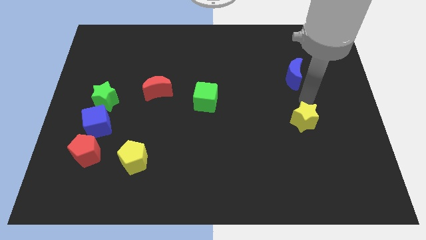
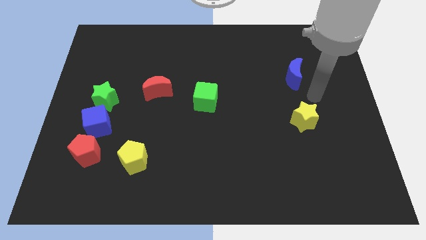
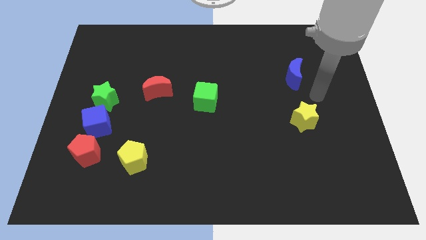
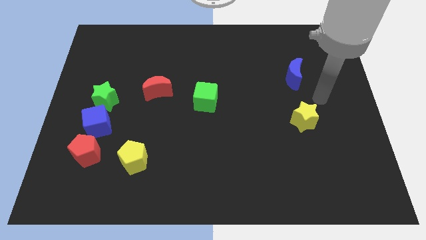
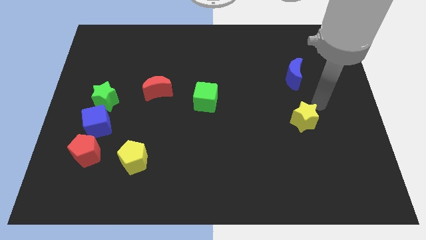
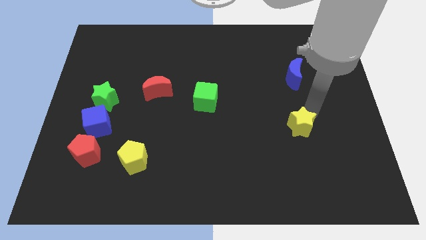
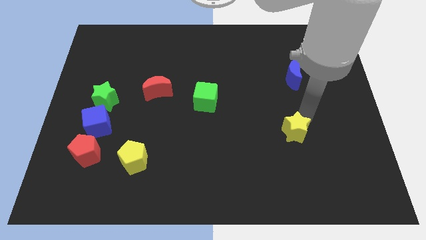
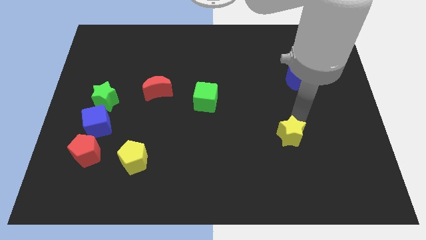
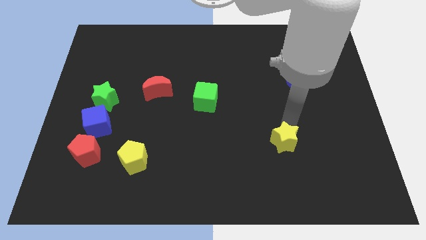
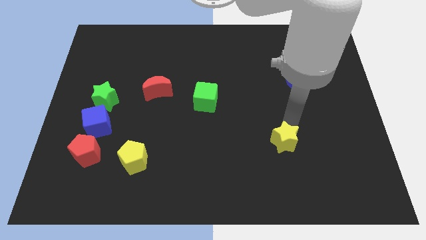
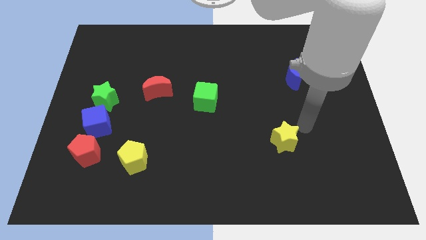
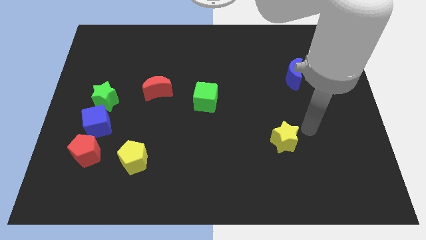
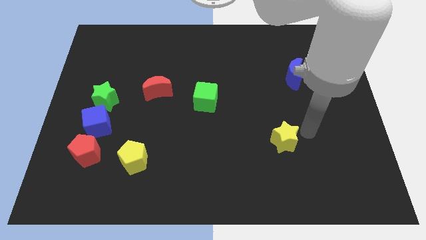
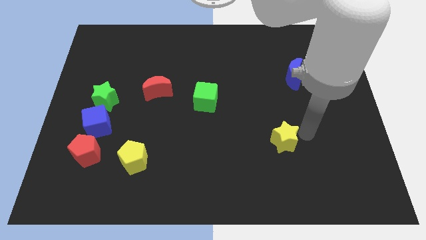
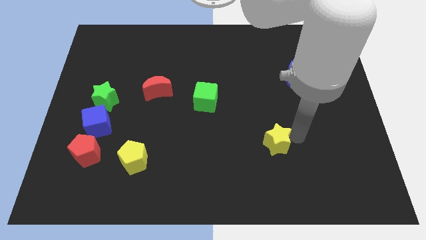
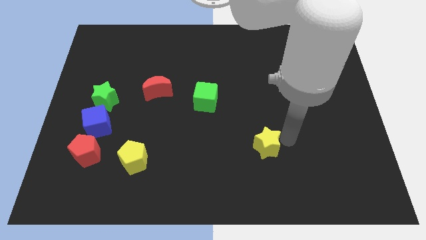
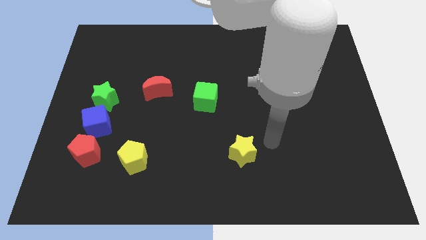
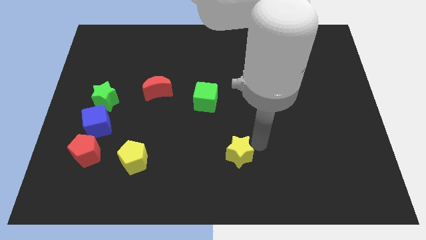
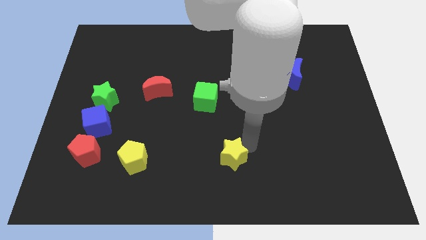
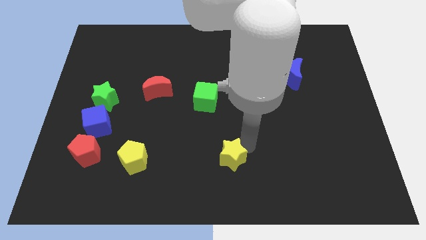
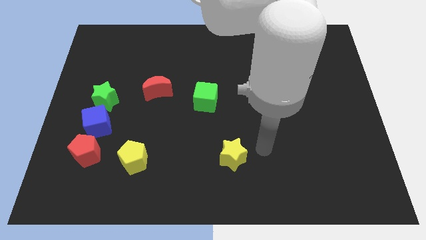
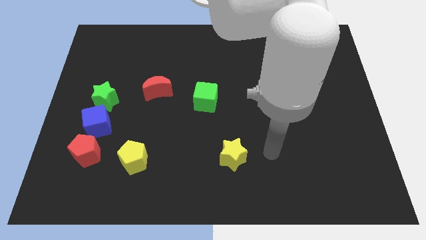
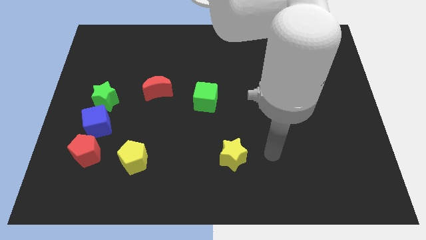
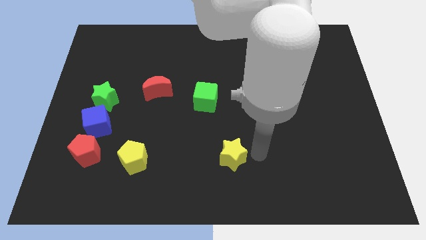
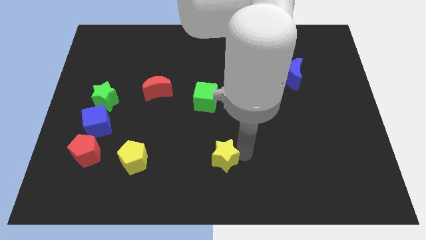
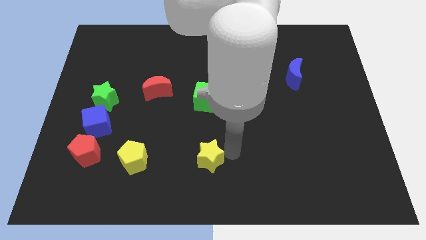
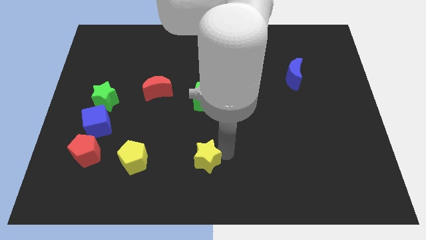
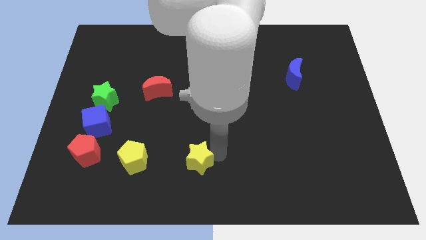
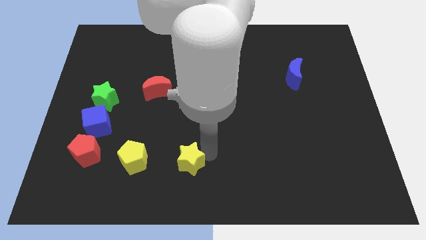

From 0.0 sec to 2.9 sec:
place the yellow star below the green cube

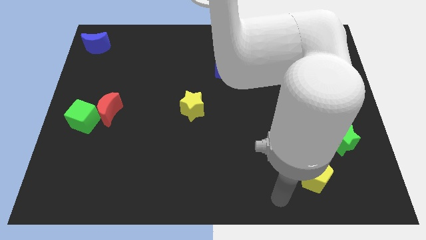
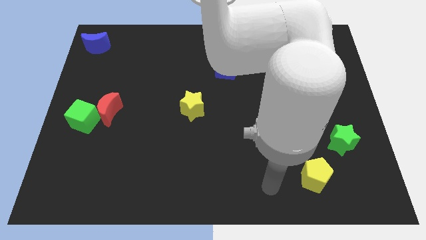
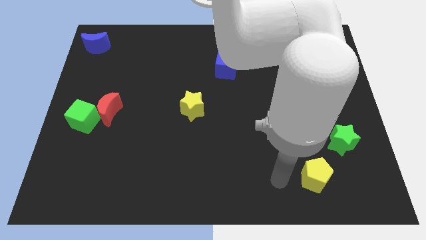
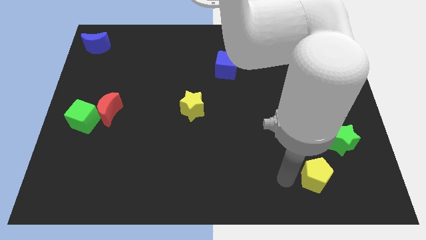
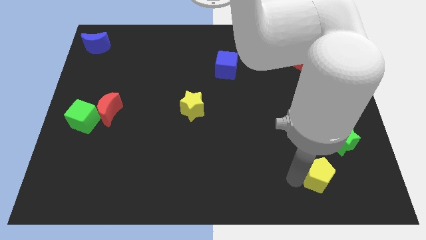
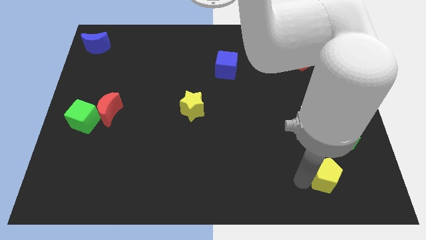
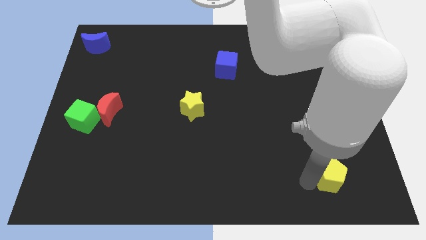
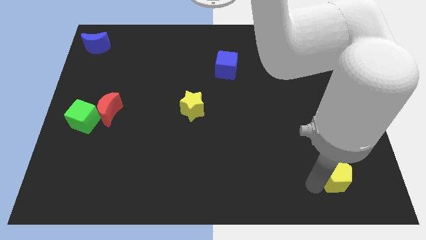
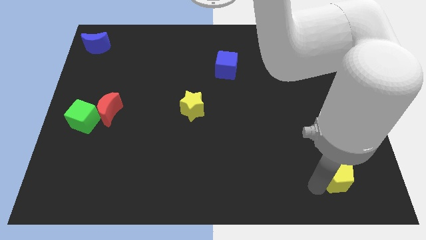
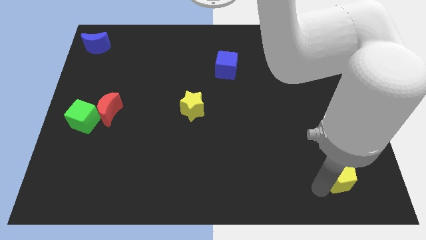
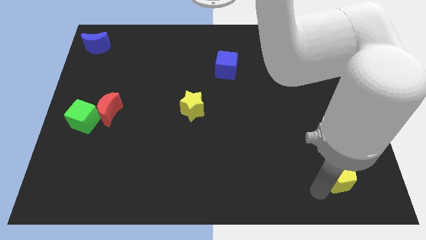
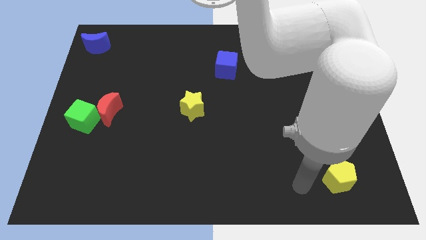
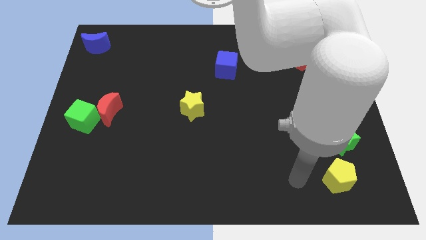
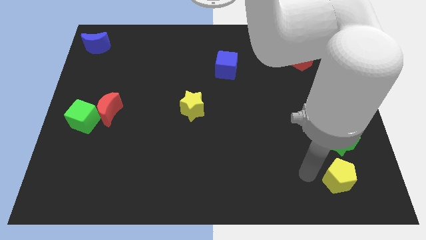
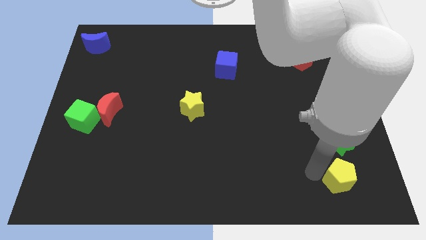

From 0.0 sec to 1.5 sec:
put the yellow pentagon underneath the green star

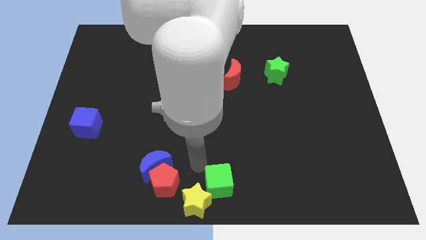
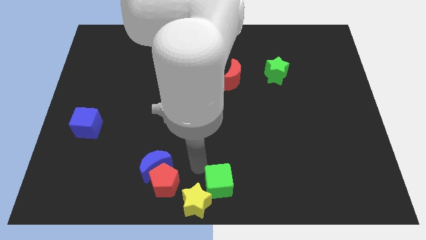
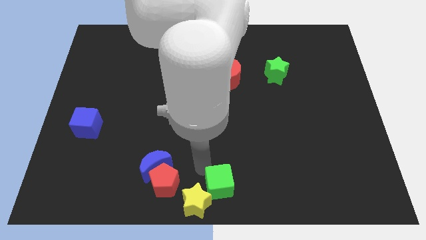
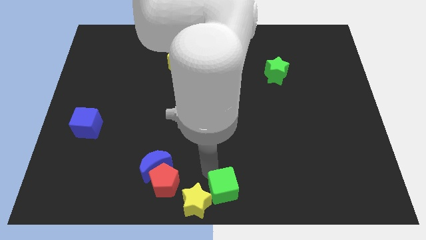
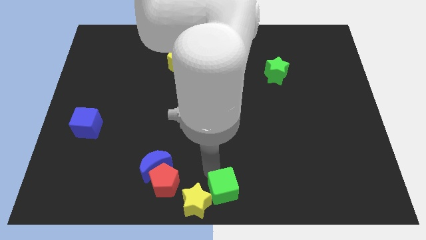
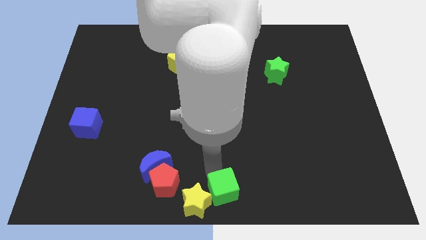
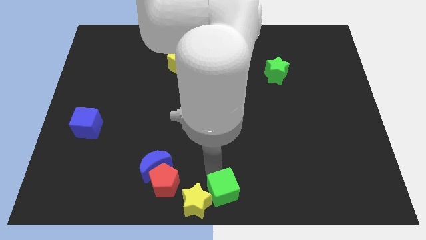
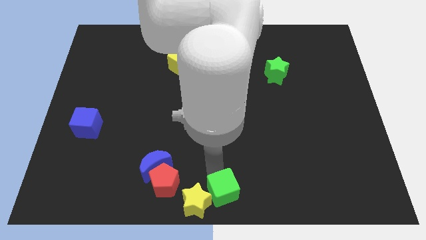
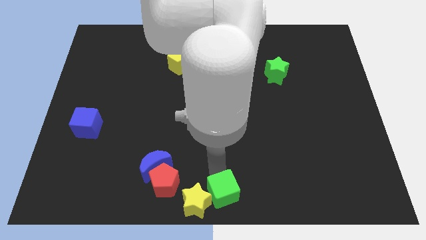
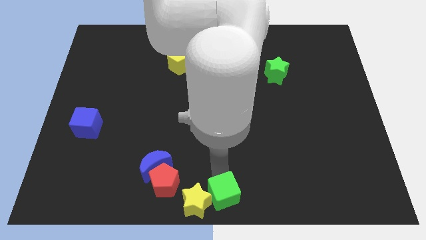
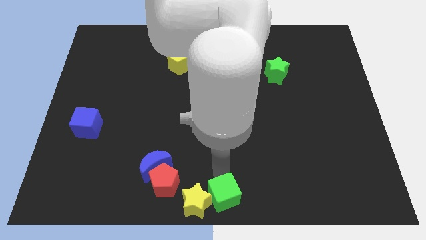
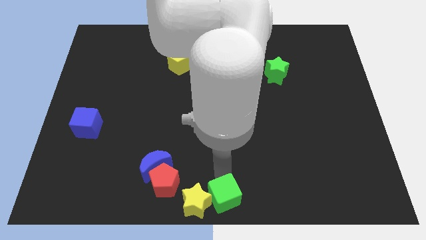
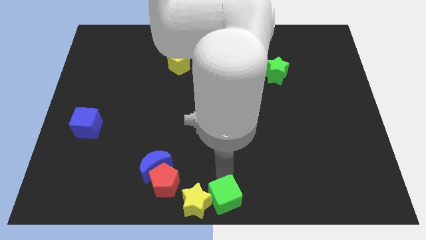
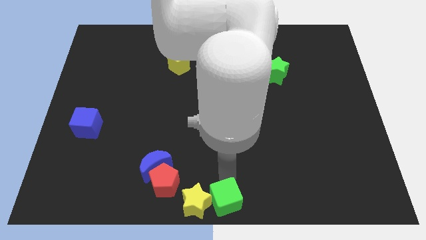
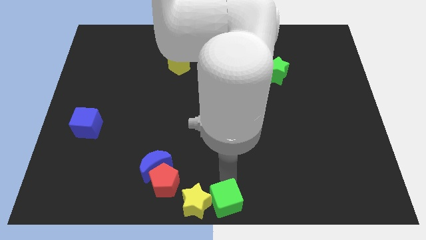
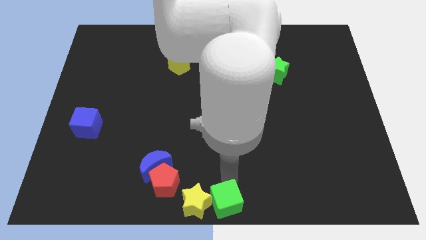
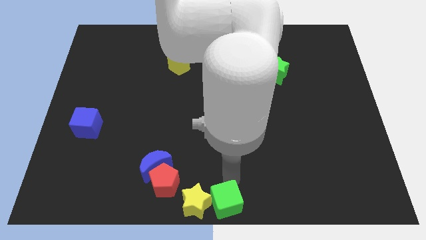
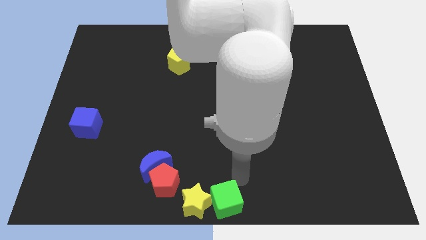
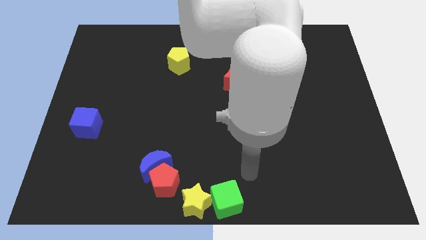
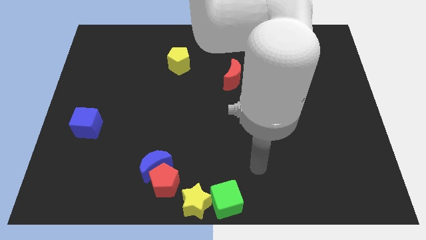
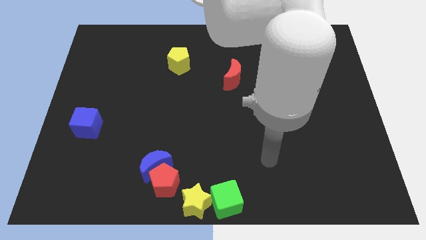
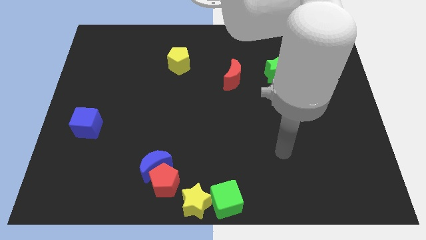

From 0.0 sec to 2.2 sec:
move green cube to the bottom center

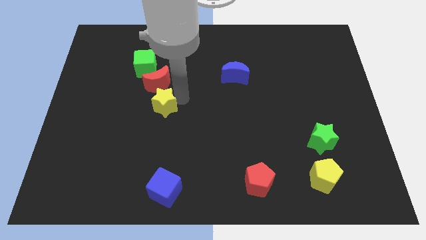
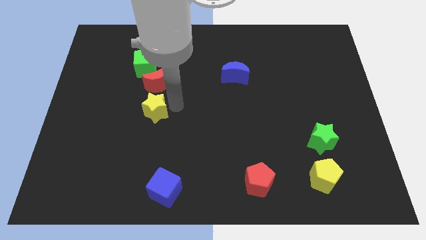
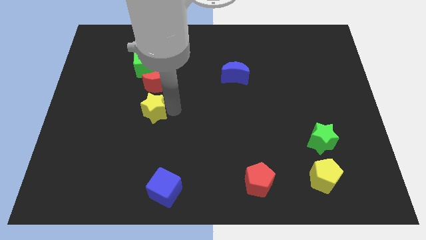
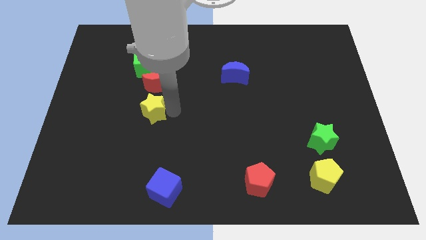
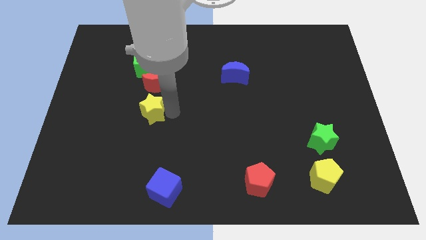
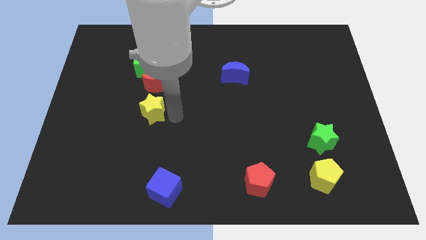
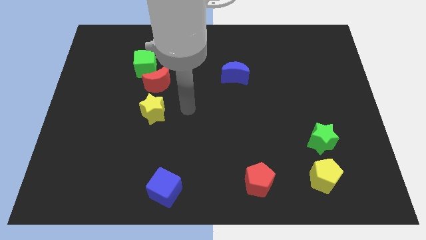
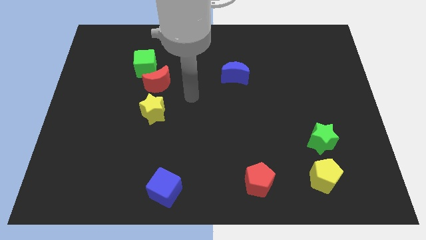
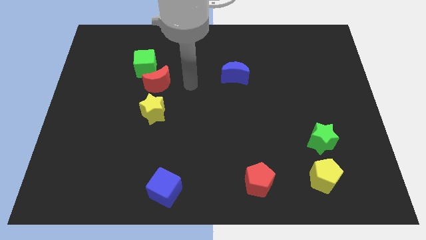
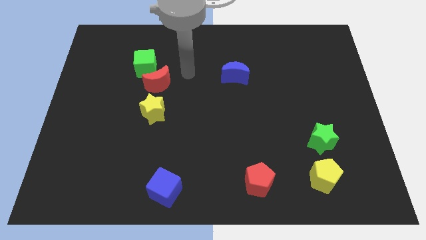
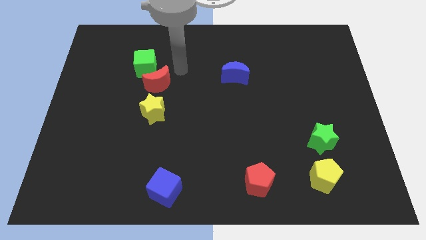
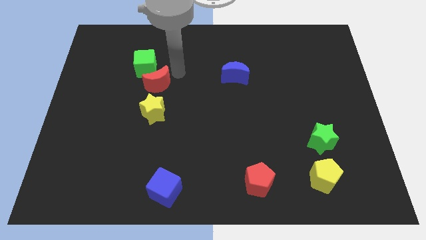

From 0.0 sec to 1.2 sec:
move the yellow star to the left bottom of the red moon

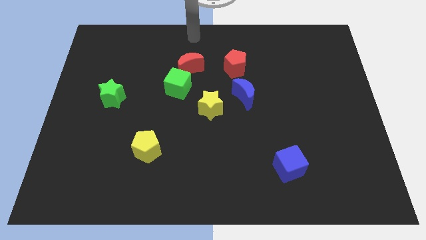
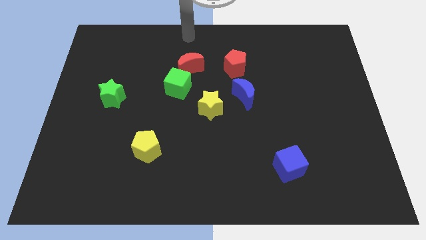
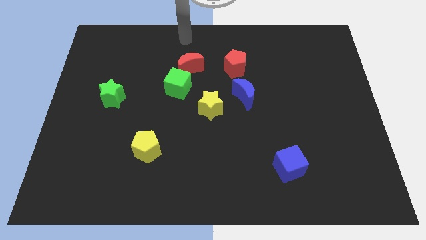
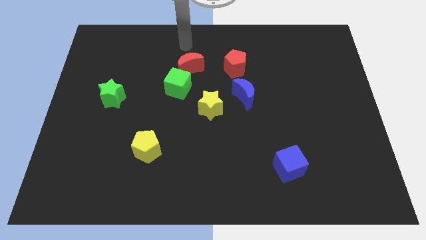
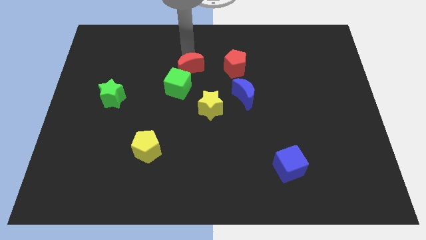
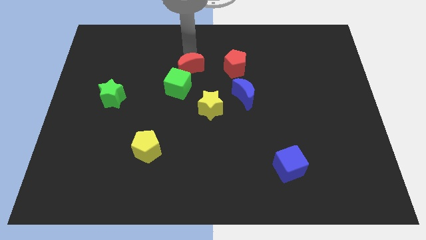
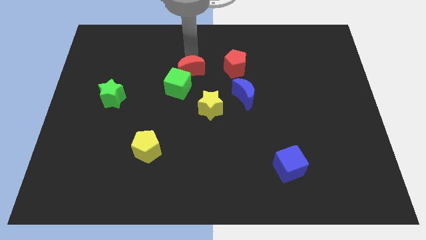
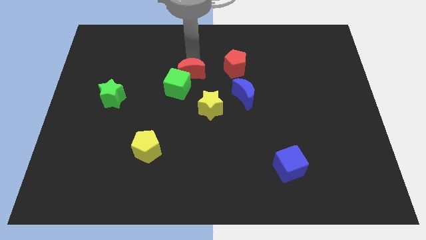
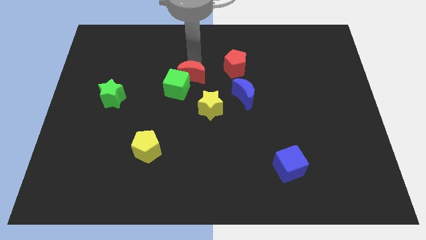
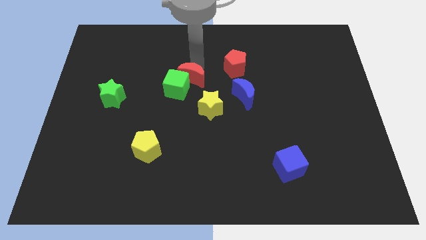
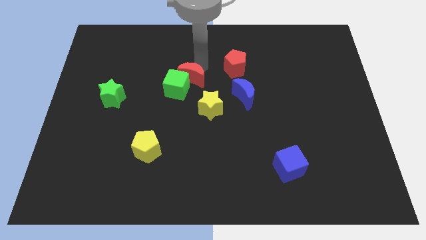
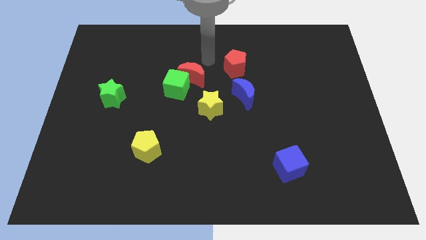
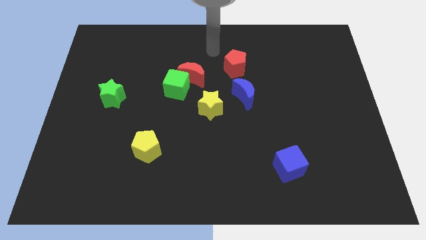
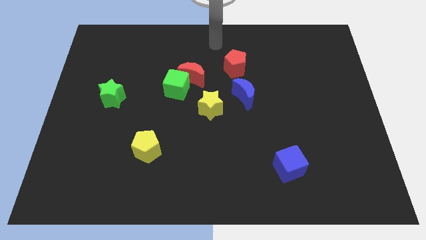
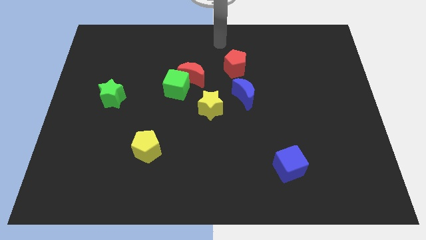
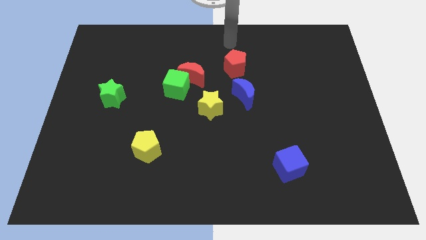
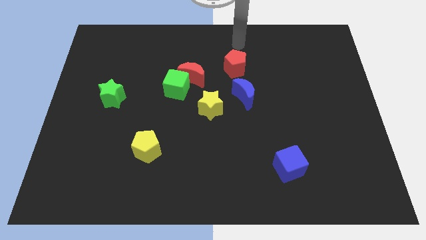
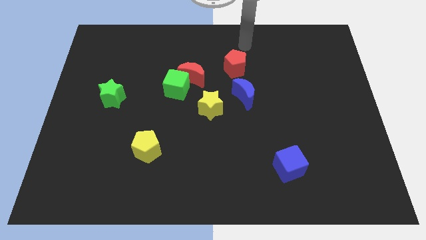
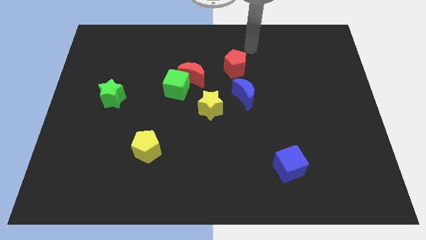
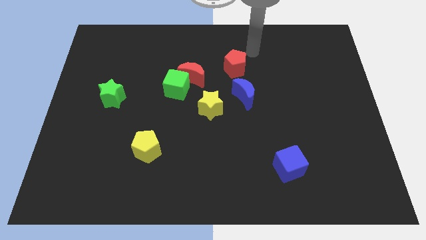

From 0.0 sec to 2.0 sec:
push the red moon into the green cube
